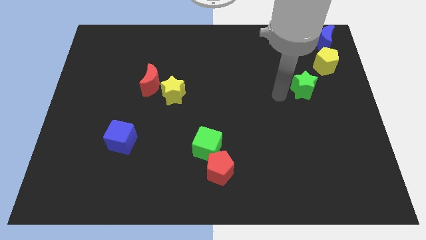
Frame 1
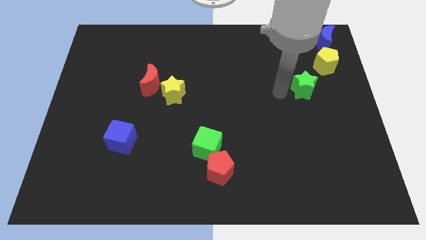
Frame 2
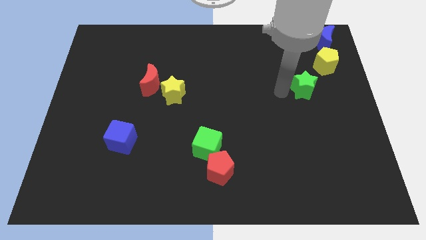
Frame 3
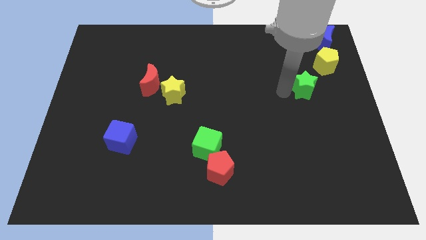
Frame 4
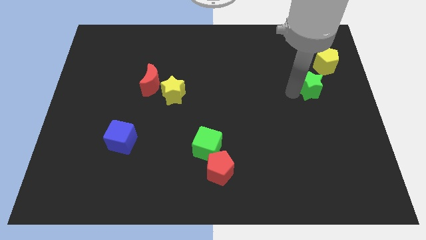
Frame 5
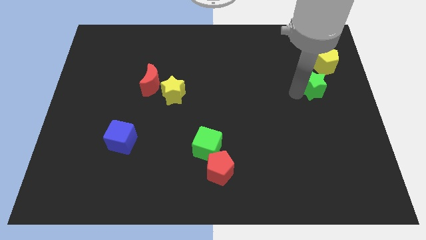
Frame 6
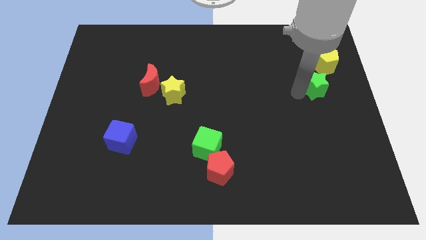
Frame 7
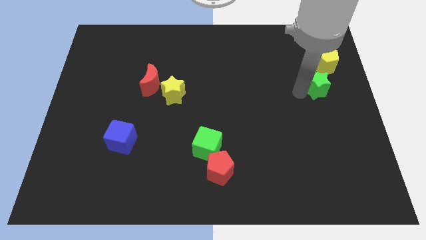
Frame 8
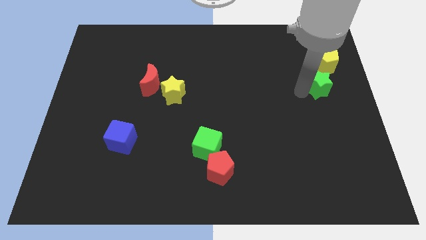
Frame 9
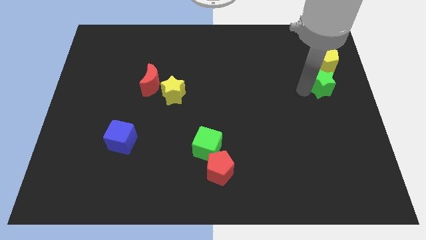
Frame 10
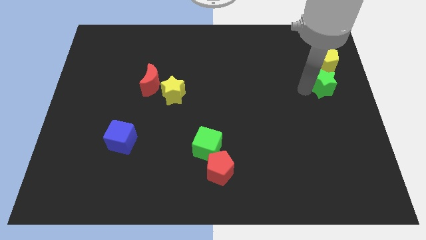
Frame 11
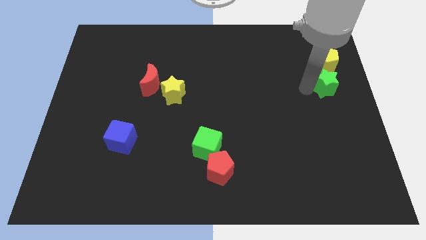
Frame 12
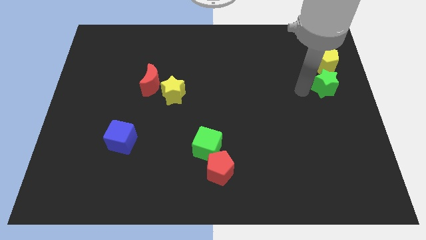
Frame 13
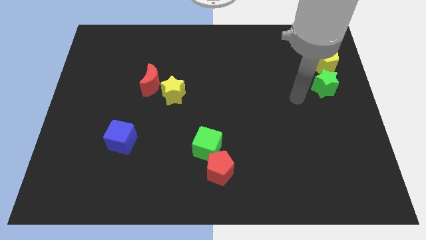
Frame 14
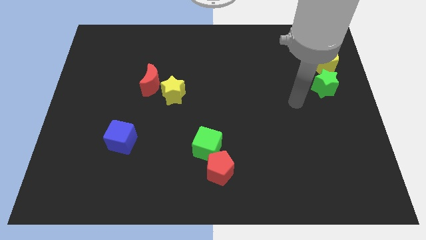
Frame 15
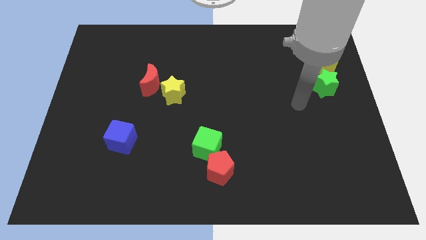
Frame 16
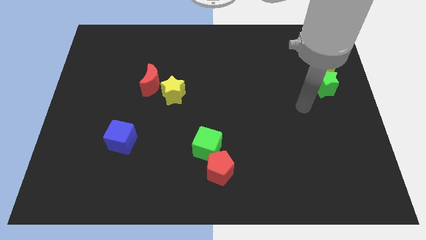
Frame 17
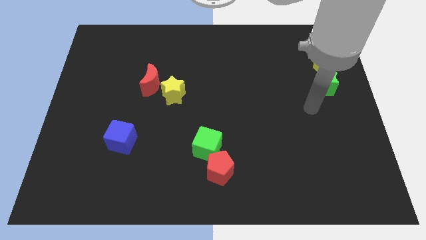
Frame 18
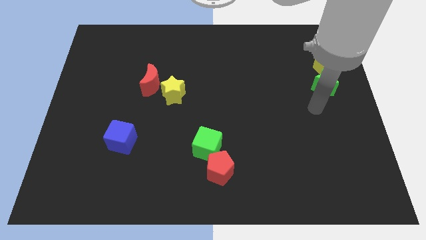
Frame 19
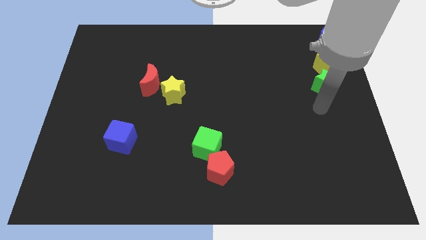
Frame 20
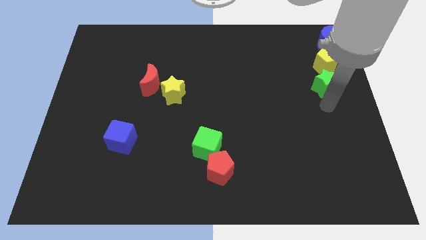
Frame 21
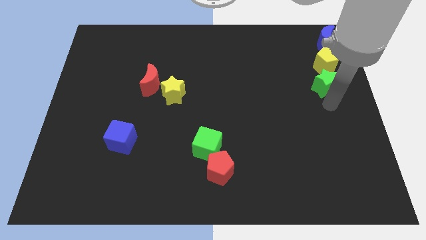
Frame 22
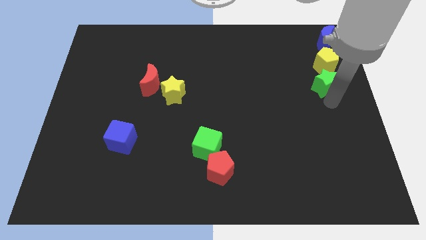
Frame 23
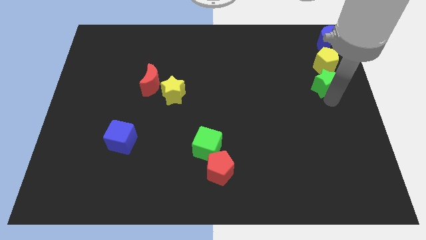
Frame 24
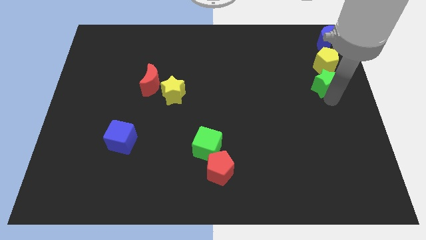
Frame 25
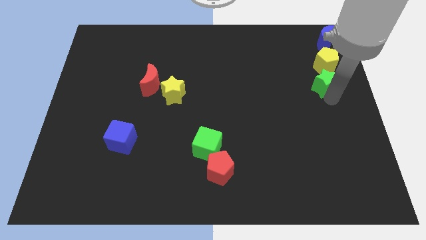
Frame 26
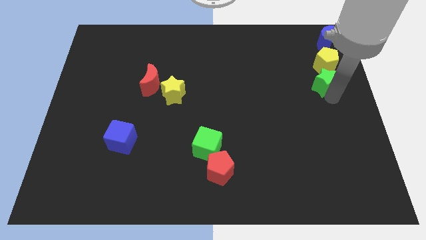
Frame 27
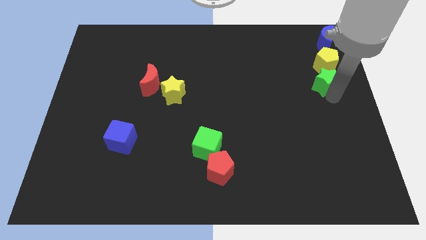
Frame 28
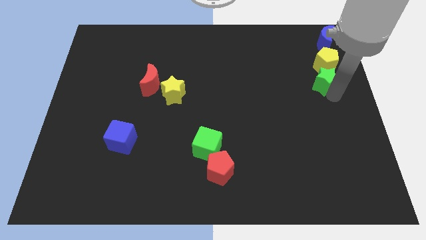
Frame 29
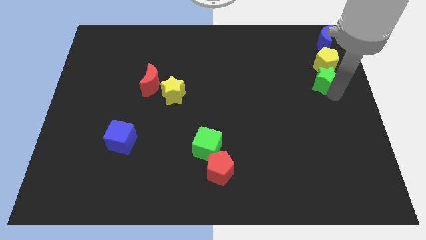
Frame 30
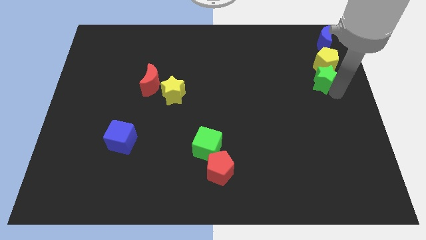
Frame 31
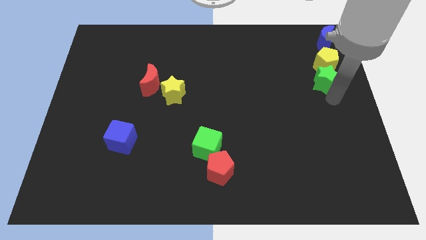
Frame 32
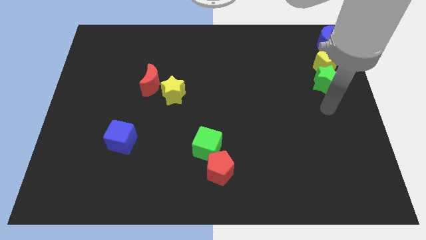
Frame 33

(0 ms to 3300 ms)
move the green star into the bottom of the yellow pentagon

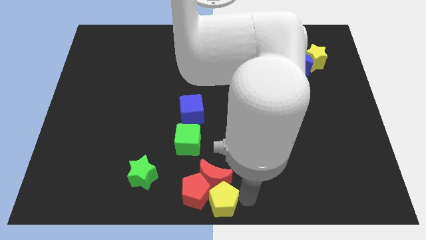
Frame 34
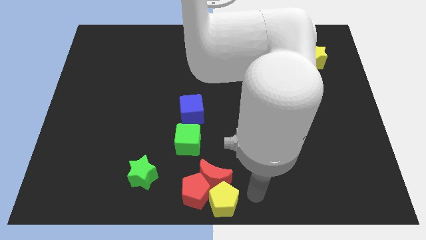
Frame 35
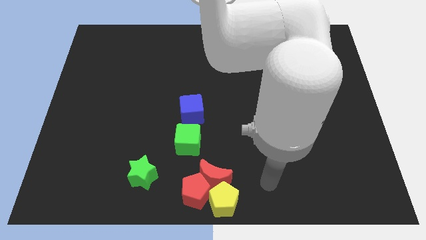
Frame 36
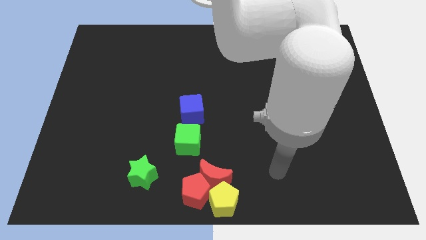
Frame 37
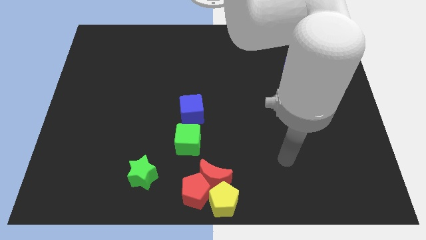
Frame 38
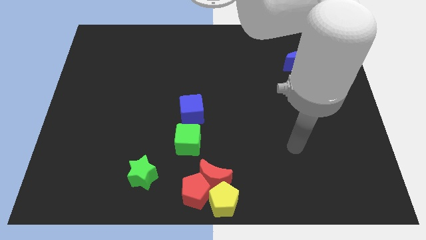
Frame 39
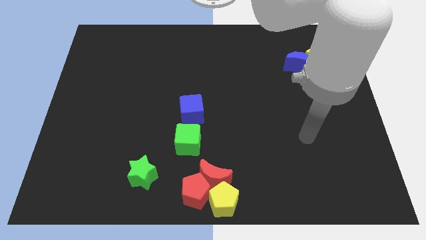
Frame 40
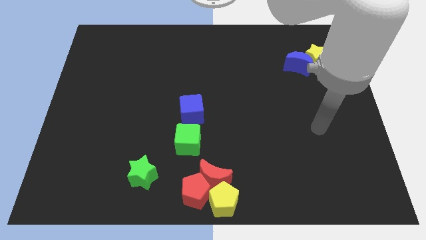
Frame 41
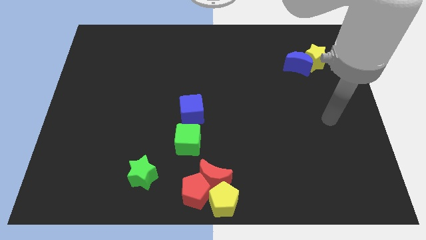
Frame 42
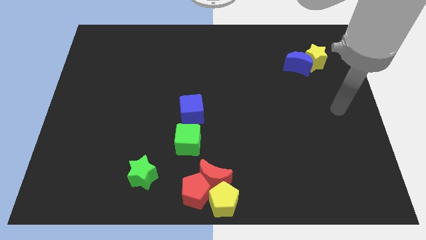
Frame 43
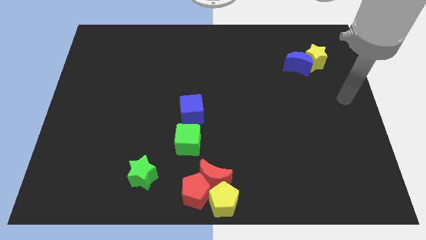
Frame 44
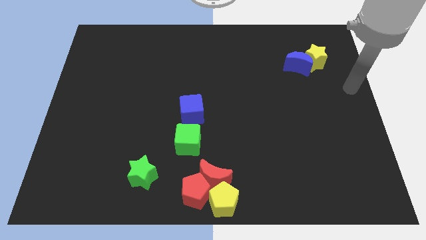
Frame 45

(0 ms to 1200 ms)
move your arm away from yellow pentagon

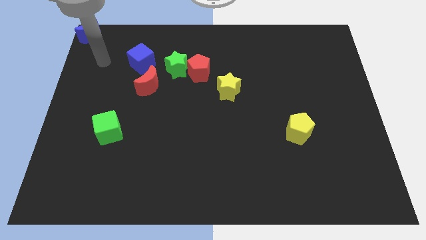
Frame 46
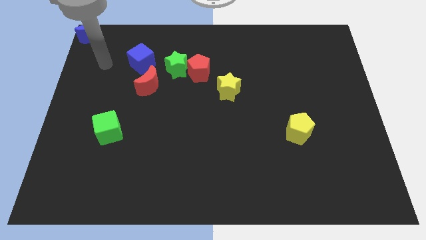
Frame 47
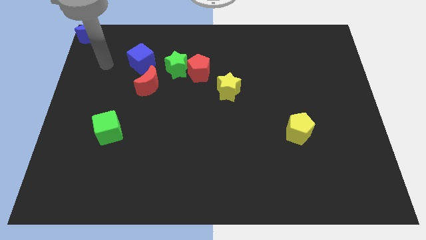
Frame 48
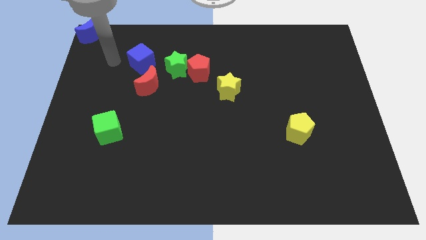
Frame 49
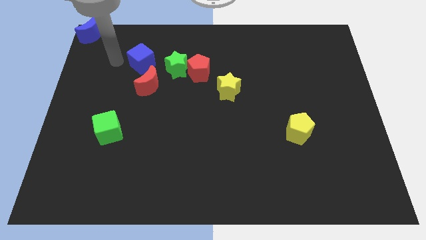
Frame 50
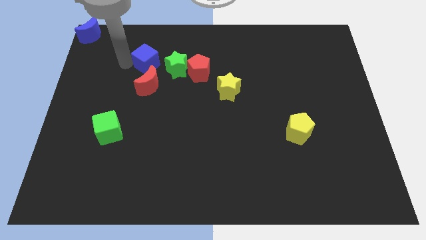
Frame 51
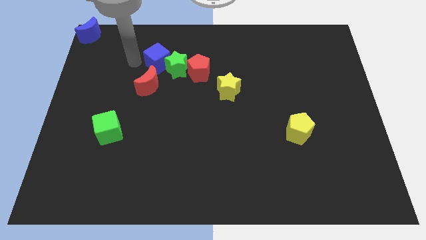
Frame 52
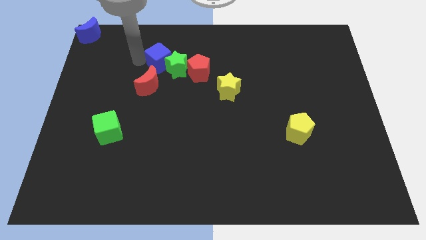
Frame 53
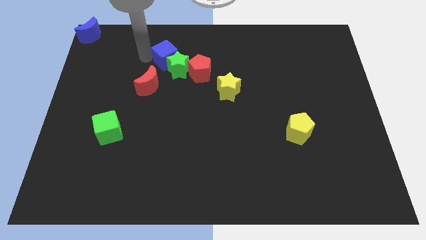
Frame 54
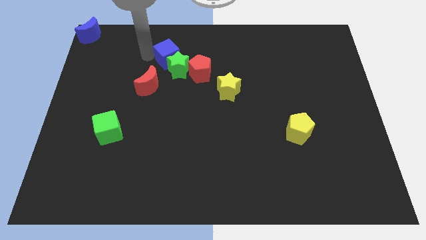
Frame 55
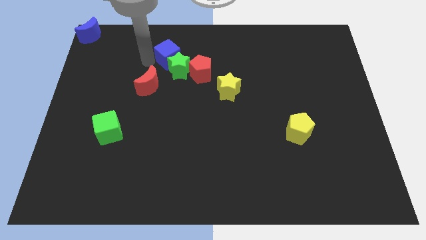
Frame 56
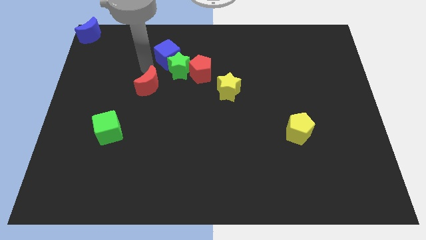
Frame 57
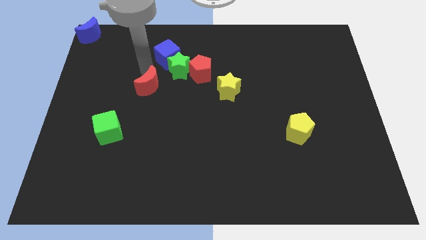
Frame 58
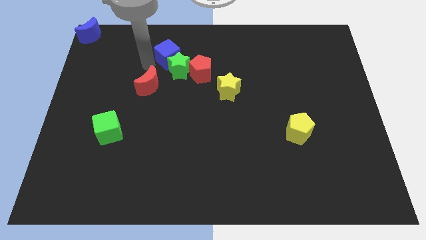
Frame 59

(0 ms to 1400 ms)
push the blue cube into the green star

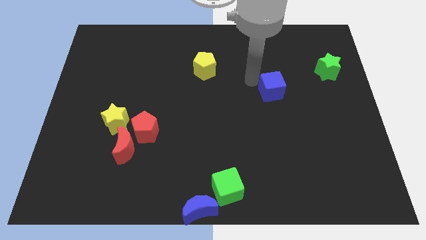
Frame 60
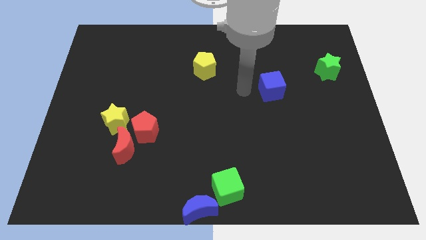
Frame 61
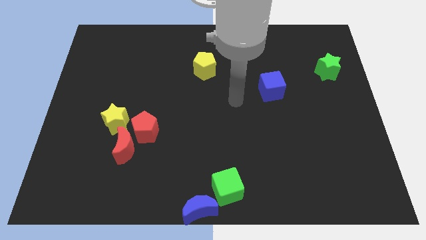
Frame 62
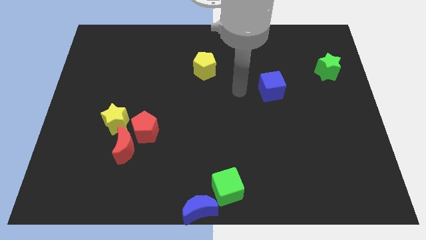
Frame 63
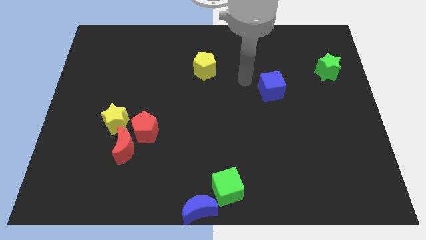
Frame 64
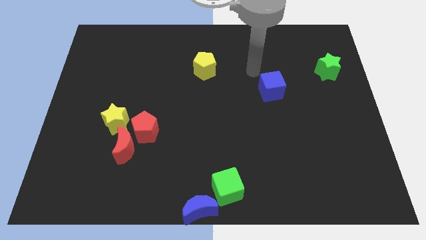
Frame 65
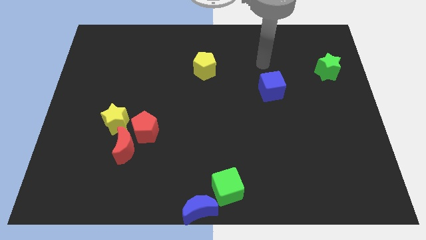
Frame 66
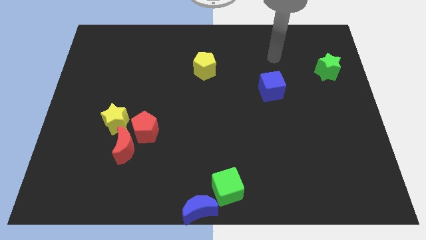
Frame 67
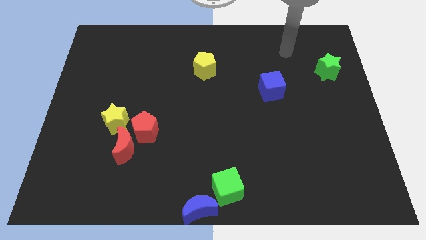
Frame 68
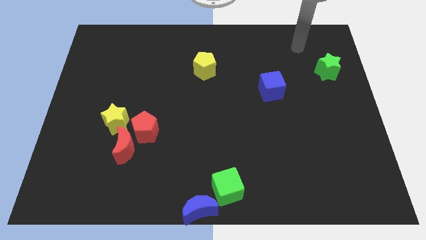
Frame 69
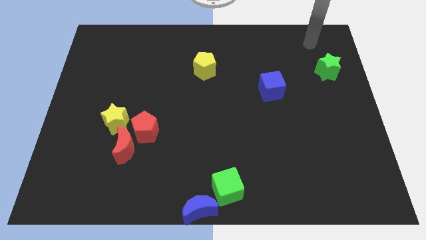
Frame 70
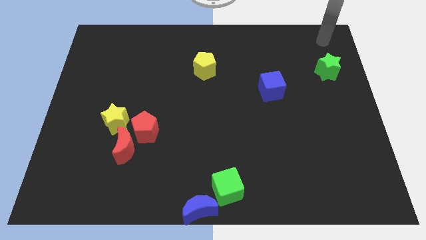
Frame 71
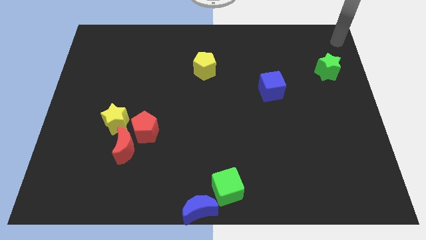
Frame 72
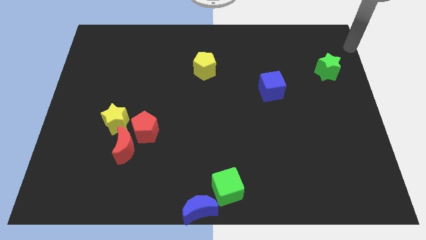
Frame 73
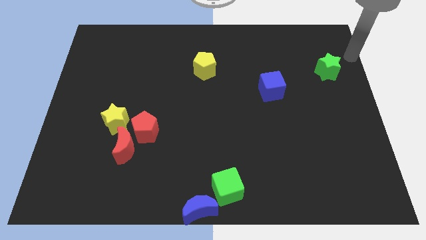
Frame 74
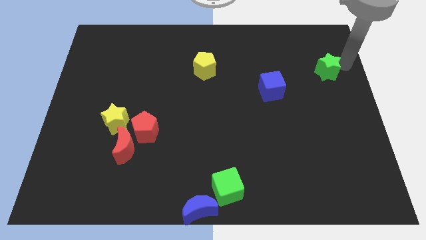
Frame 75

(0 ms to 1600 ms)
move away from the blue cube

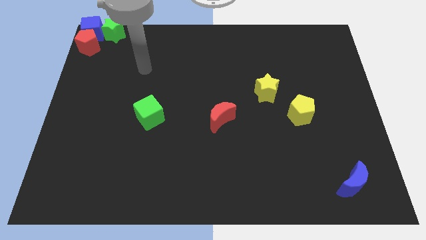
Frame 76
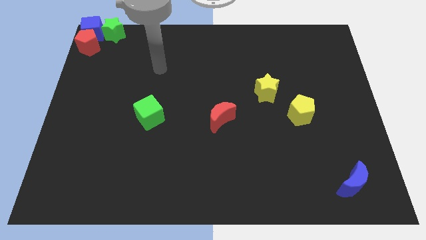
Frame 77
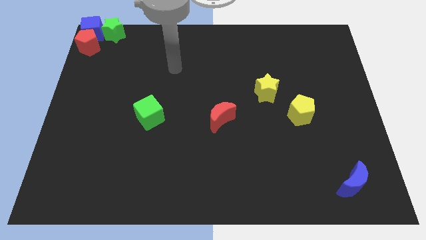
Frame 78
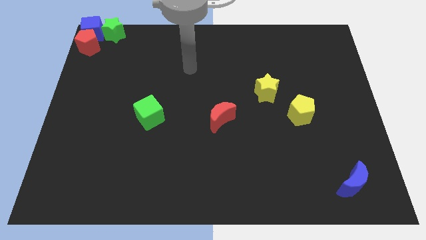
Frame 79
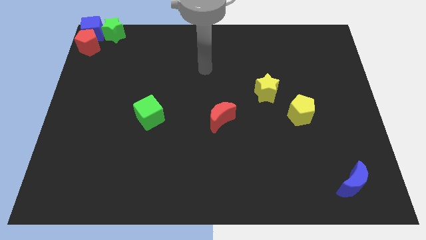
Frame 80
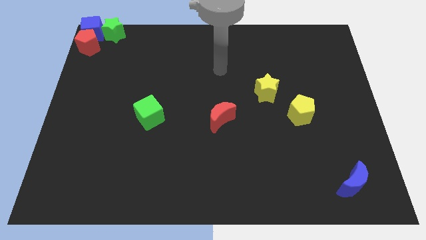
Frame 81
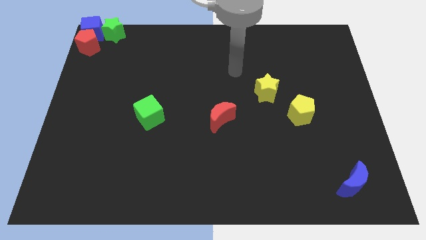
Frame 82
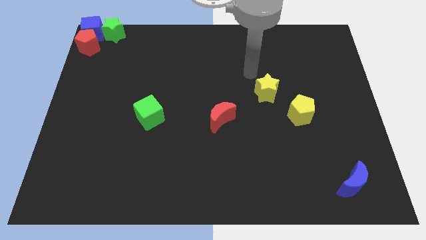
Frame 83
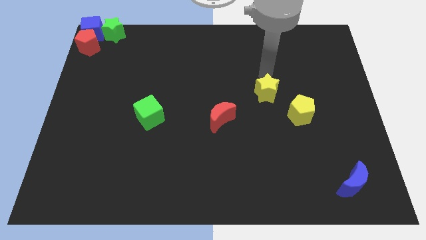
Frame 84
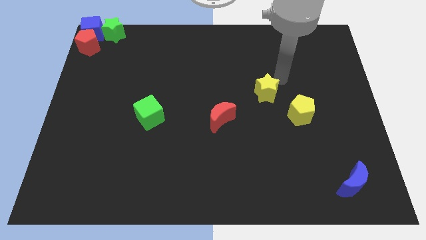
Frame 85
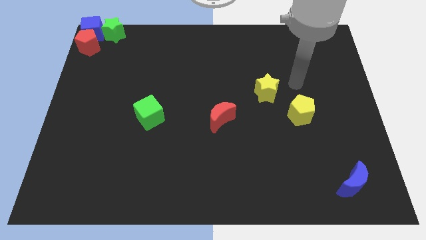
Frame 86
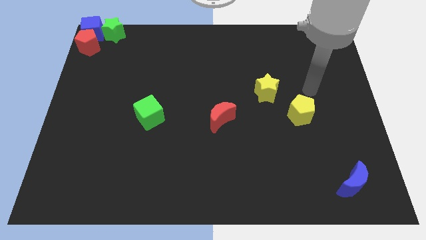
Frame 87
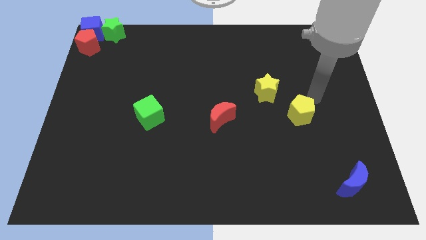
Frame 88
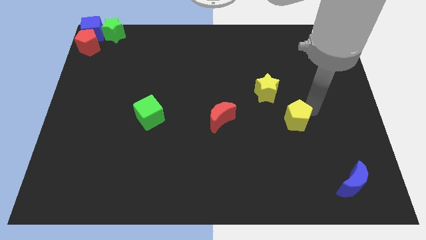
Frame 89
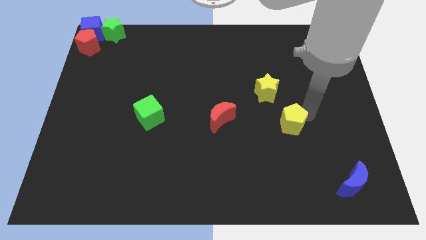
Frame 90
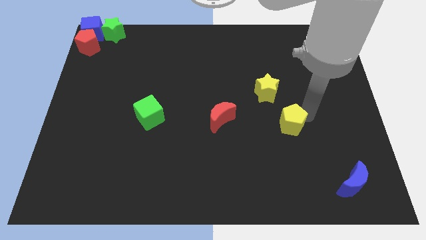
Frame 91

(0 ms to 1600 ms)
place the yellow pentagon diagonally in between the yellow star and blue moon
